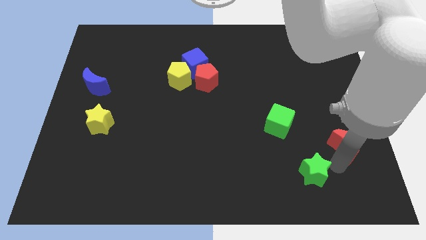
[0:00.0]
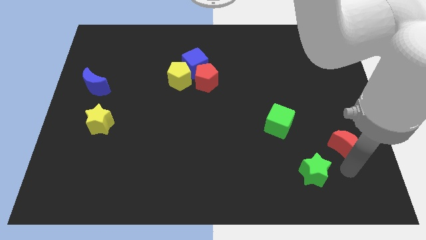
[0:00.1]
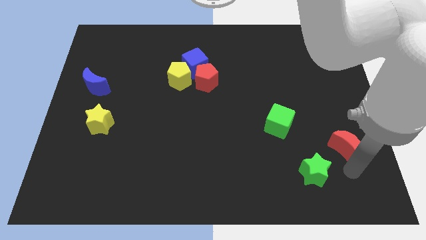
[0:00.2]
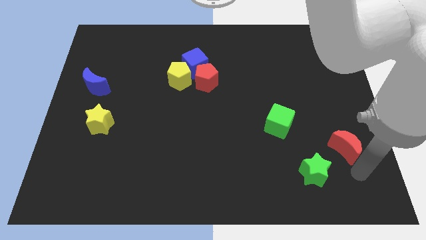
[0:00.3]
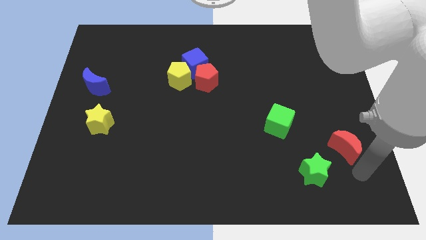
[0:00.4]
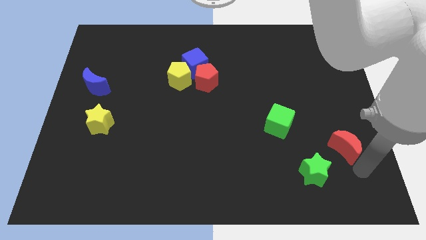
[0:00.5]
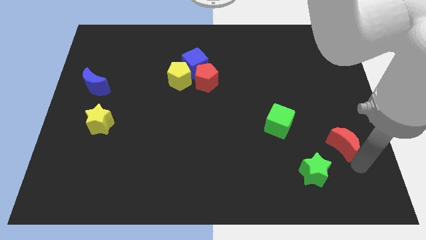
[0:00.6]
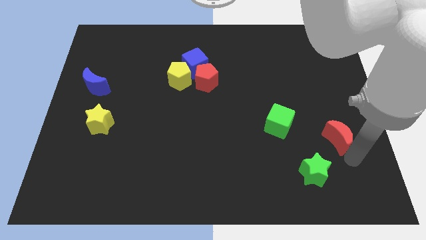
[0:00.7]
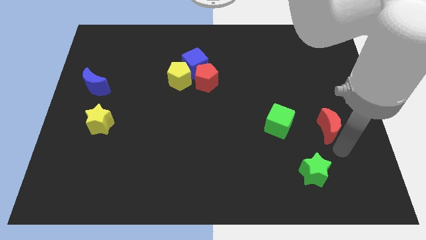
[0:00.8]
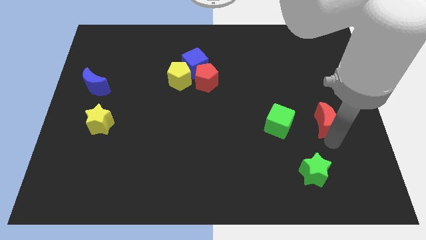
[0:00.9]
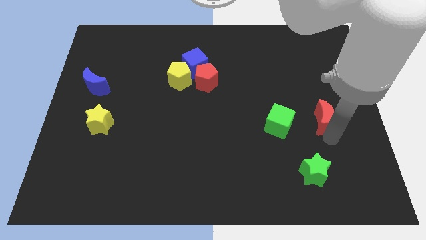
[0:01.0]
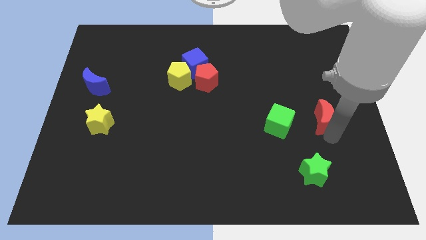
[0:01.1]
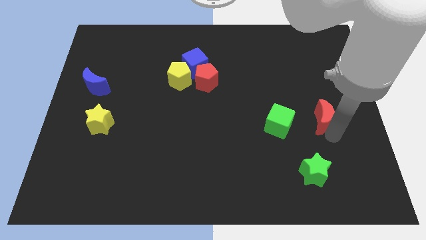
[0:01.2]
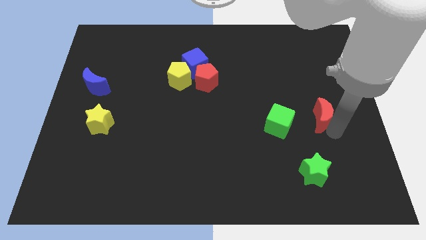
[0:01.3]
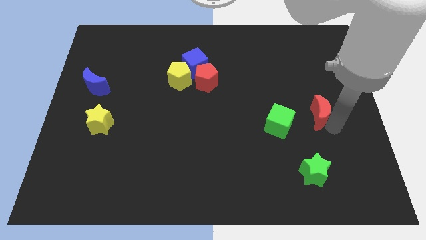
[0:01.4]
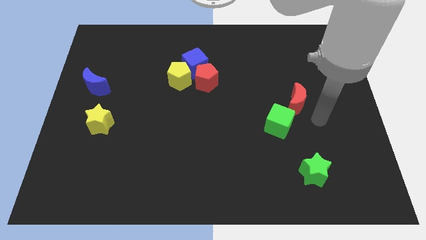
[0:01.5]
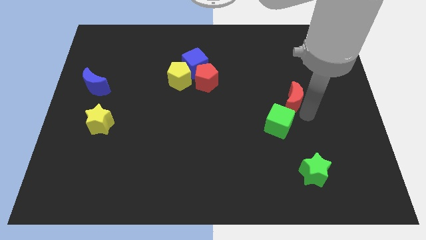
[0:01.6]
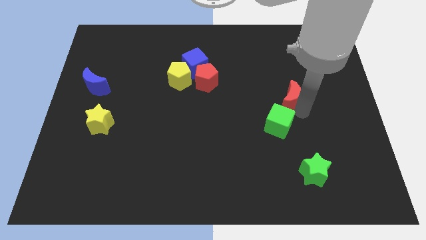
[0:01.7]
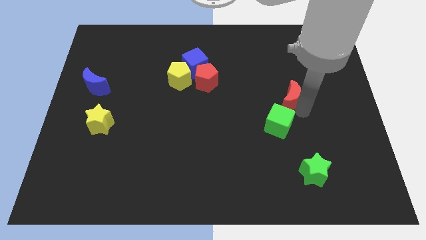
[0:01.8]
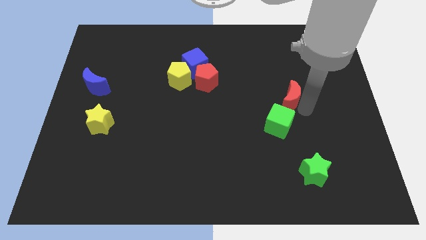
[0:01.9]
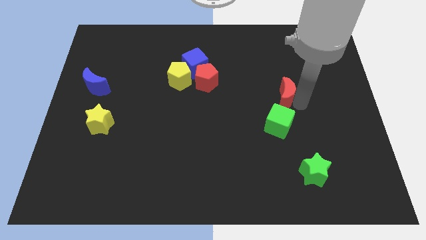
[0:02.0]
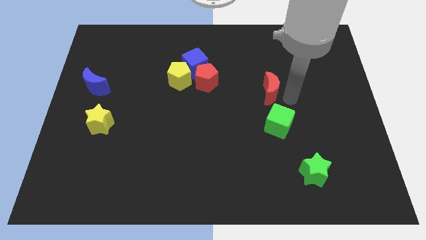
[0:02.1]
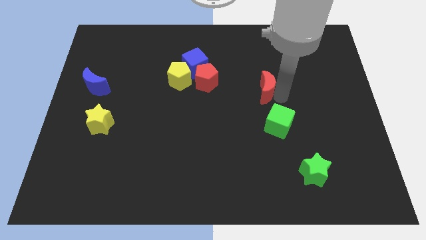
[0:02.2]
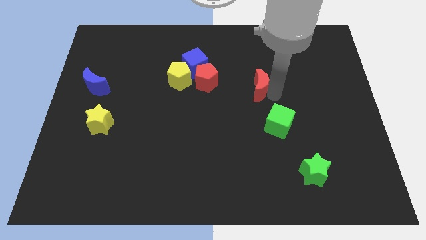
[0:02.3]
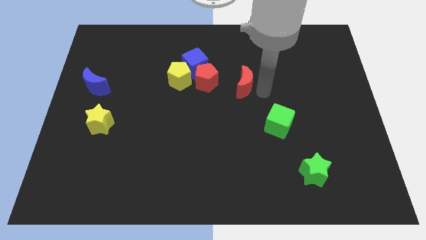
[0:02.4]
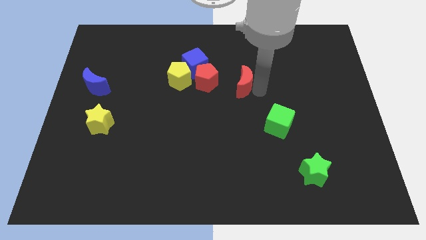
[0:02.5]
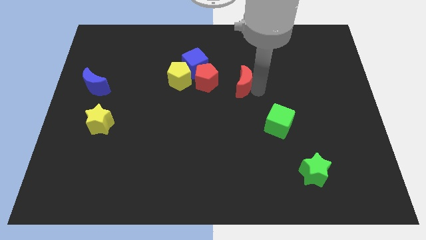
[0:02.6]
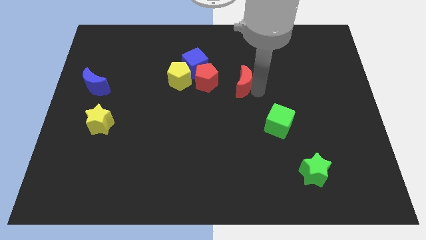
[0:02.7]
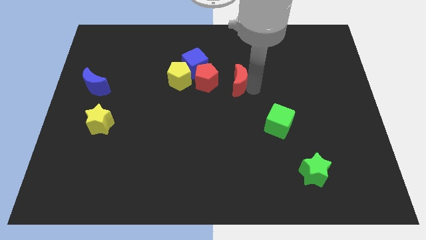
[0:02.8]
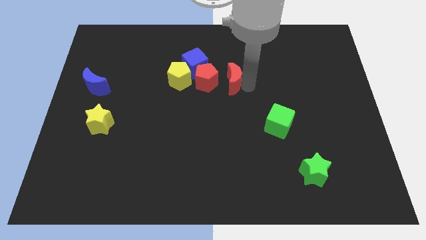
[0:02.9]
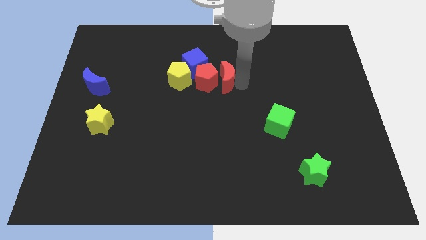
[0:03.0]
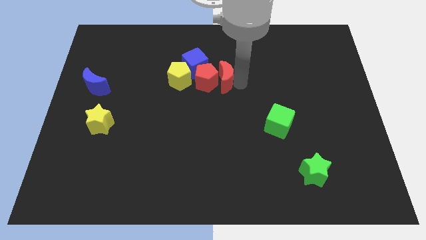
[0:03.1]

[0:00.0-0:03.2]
place the red crescent right to the red pentagon to form a horizontal line

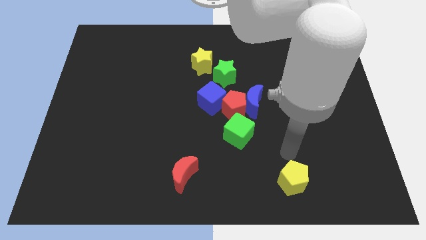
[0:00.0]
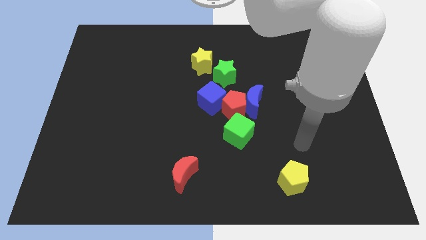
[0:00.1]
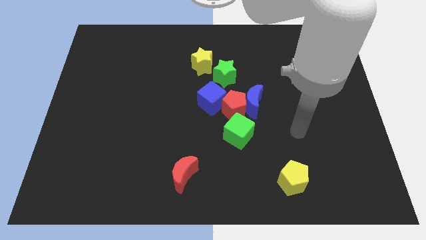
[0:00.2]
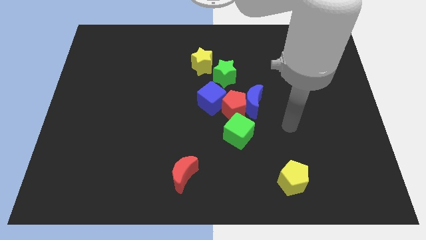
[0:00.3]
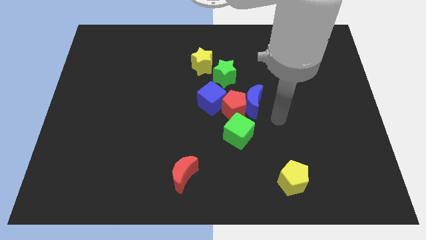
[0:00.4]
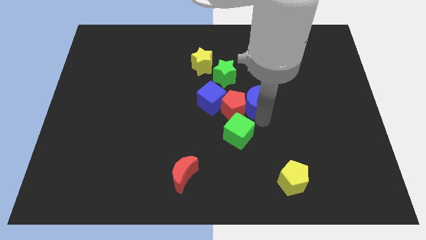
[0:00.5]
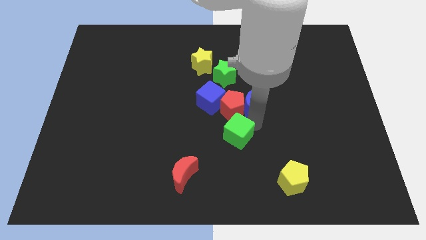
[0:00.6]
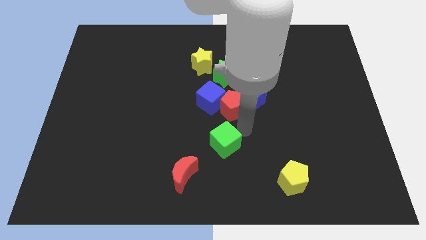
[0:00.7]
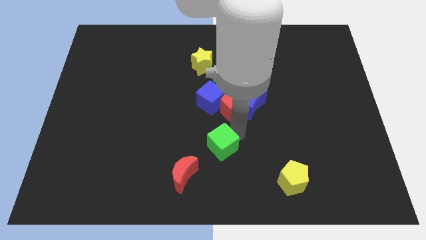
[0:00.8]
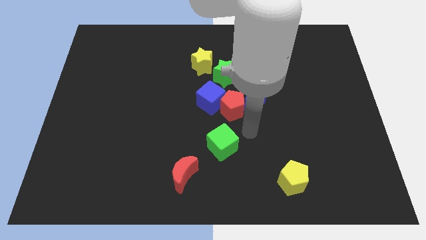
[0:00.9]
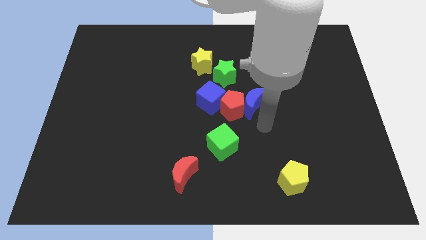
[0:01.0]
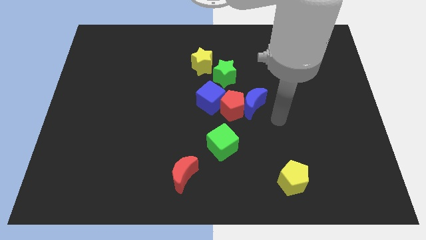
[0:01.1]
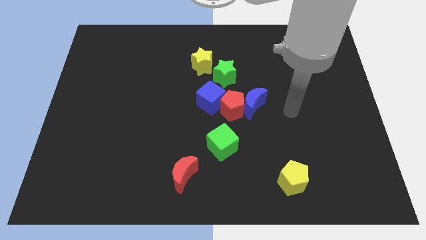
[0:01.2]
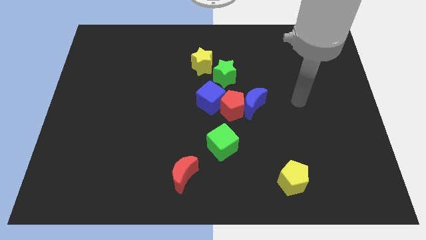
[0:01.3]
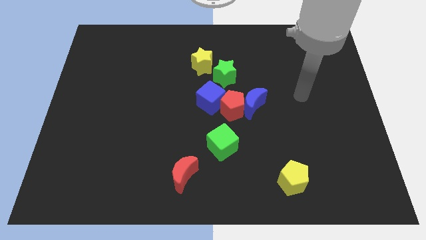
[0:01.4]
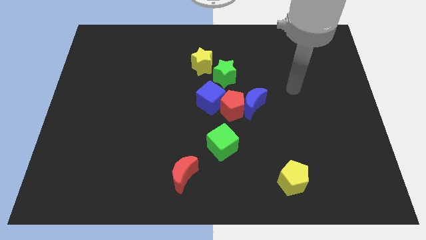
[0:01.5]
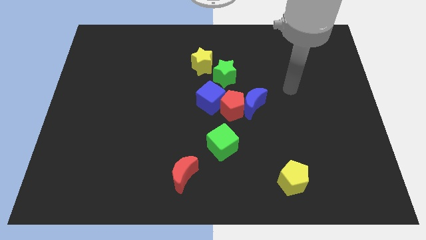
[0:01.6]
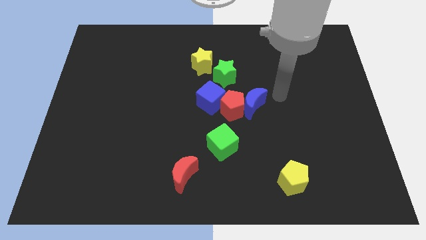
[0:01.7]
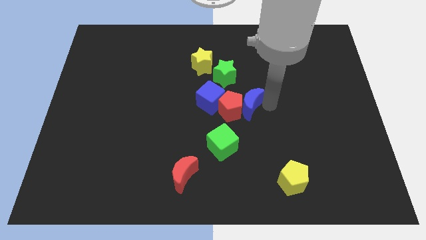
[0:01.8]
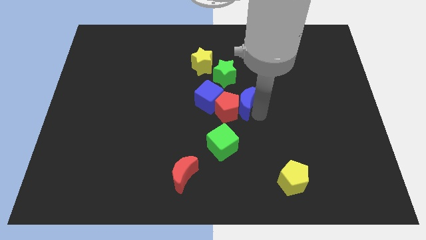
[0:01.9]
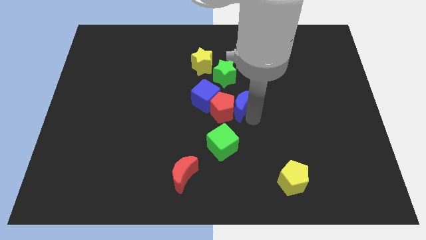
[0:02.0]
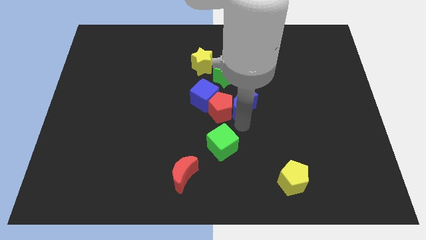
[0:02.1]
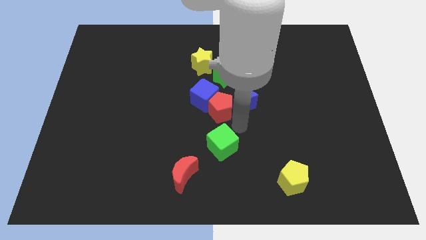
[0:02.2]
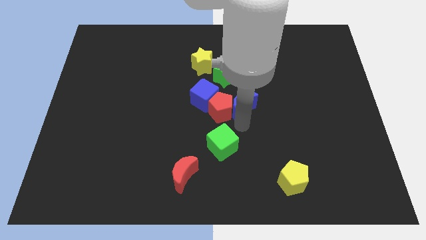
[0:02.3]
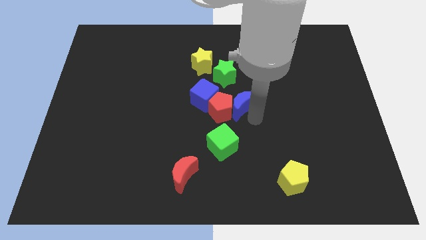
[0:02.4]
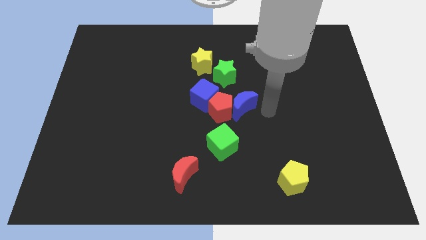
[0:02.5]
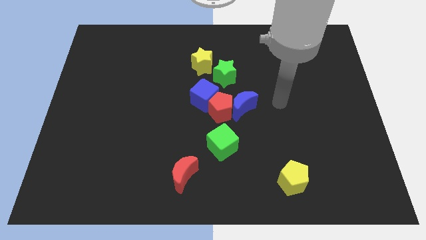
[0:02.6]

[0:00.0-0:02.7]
move green cube slightly down

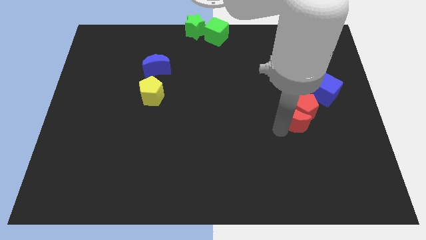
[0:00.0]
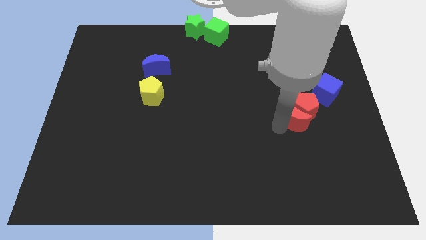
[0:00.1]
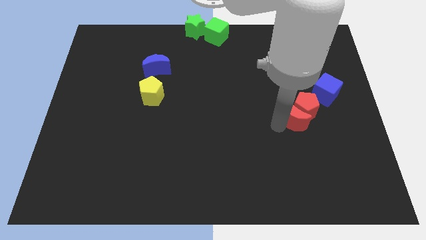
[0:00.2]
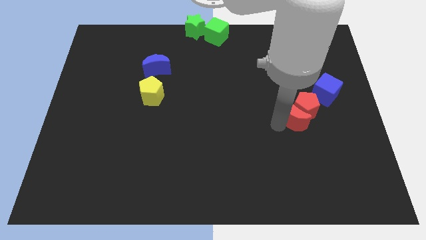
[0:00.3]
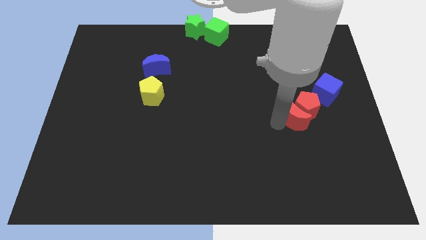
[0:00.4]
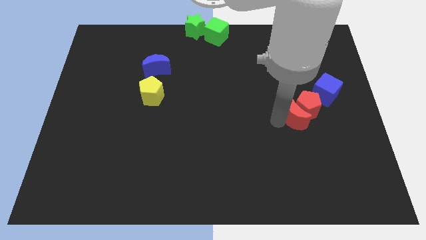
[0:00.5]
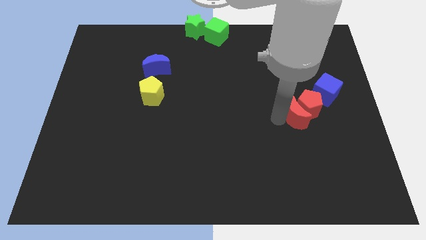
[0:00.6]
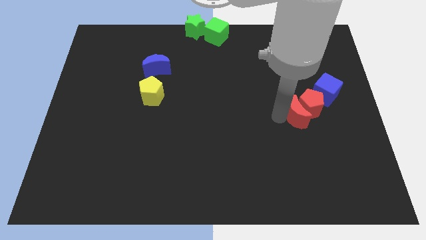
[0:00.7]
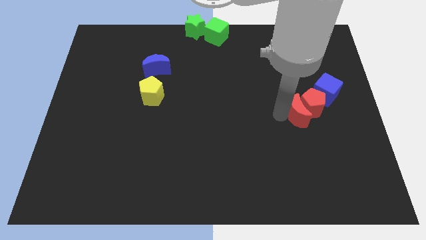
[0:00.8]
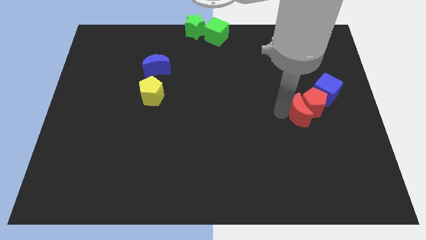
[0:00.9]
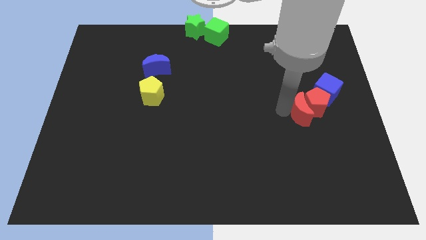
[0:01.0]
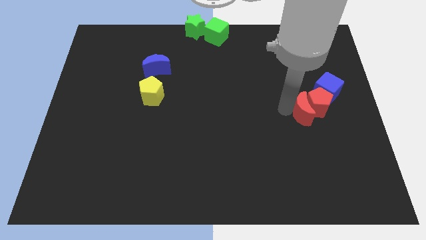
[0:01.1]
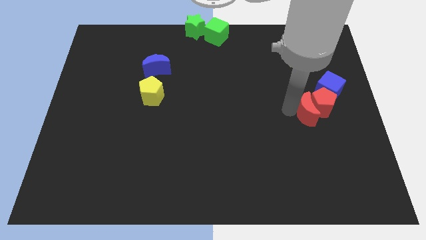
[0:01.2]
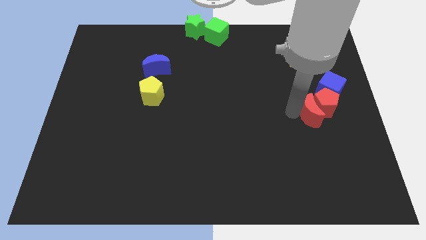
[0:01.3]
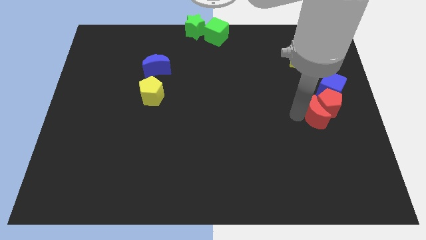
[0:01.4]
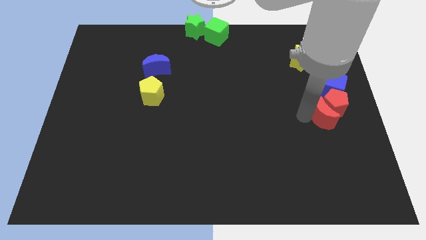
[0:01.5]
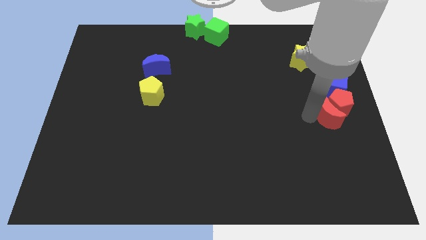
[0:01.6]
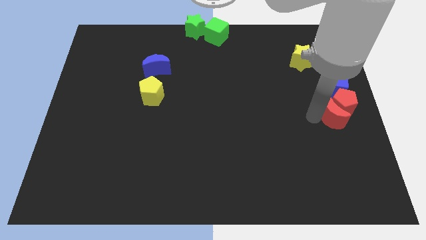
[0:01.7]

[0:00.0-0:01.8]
put the red moon and red pentagon below the blue cube

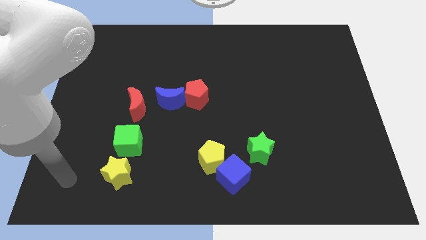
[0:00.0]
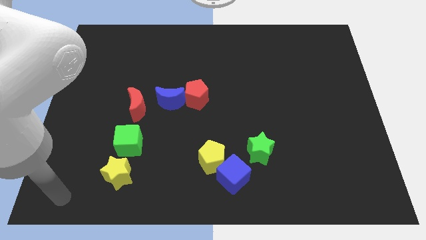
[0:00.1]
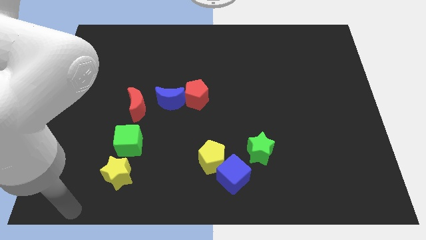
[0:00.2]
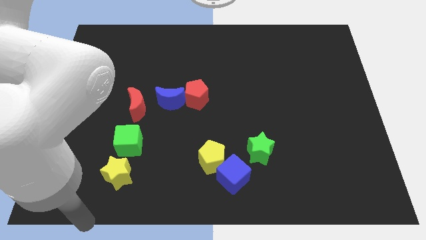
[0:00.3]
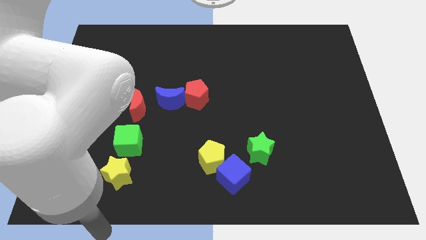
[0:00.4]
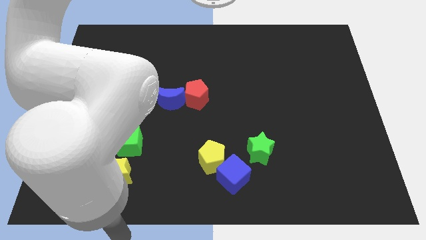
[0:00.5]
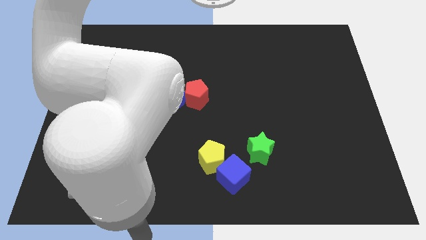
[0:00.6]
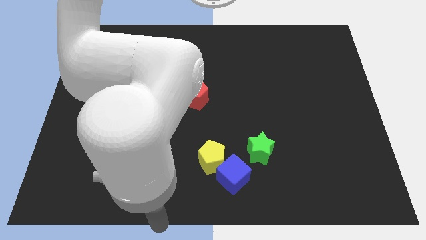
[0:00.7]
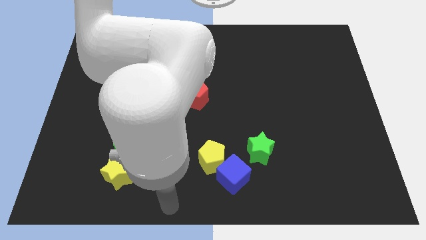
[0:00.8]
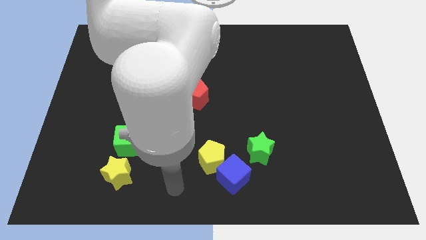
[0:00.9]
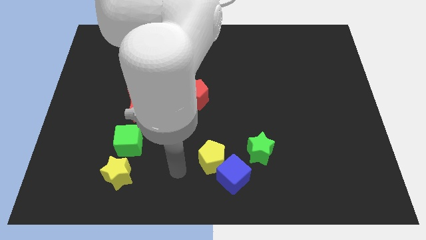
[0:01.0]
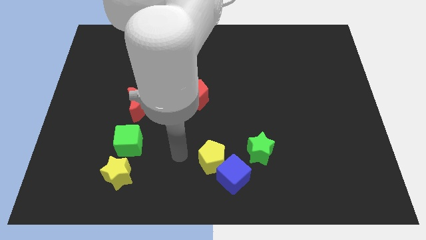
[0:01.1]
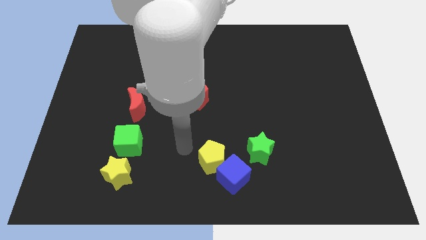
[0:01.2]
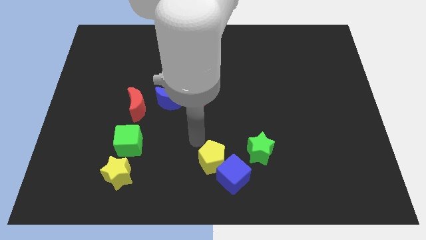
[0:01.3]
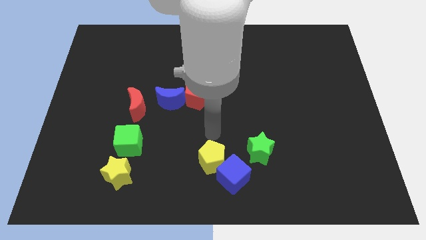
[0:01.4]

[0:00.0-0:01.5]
point your arm above the yellow pentagon
